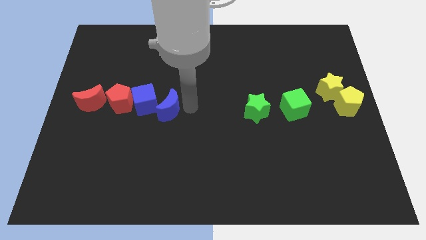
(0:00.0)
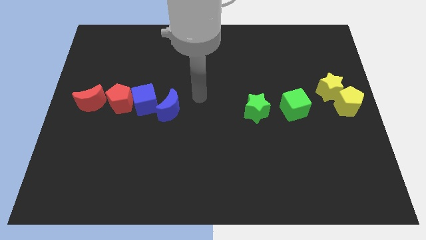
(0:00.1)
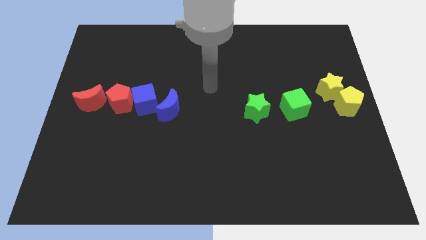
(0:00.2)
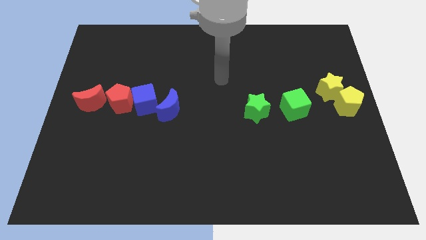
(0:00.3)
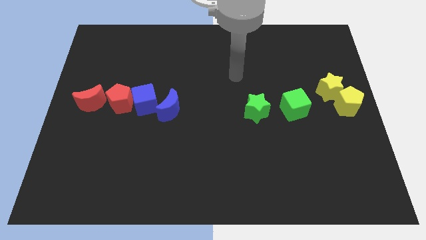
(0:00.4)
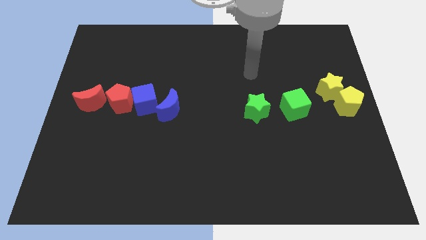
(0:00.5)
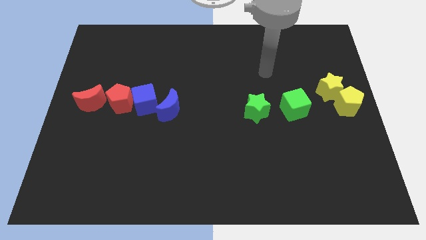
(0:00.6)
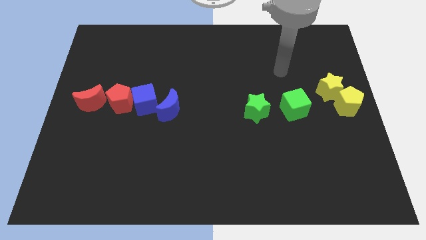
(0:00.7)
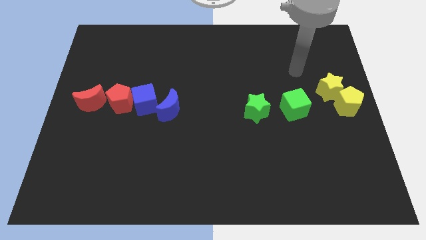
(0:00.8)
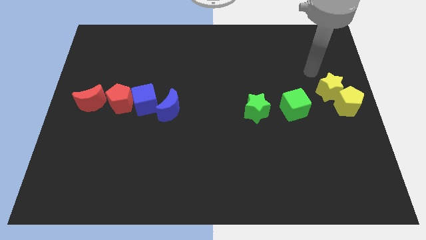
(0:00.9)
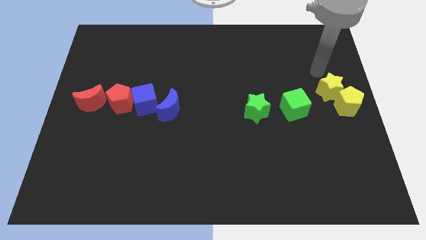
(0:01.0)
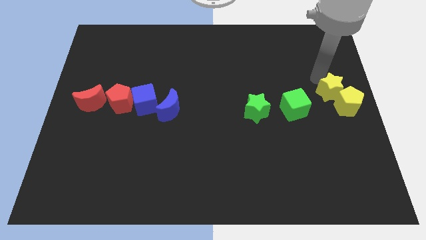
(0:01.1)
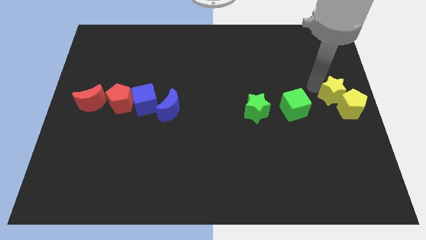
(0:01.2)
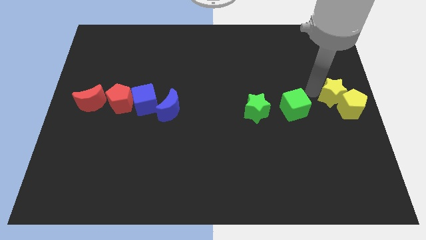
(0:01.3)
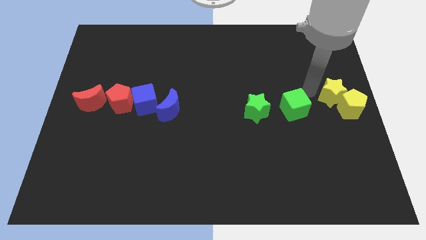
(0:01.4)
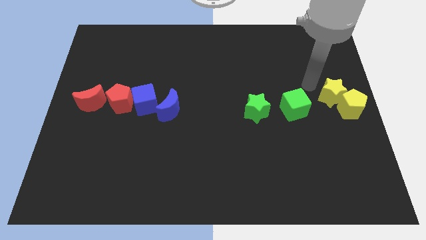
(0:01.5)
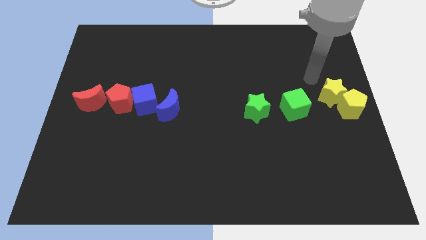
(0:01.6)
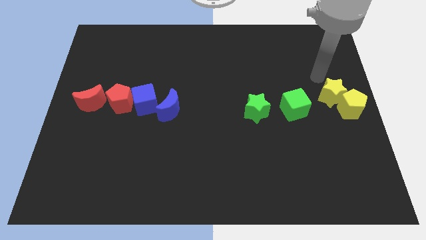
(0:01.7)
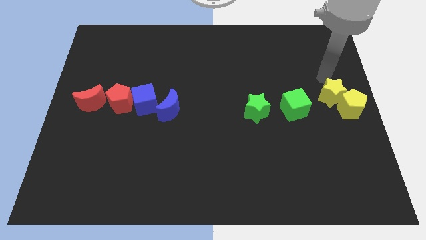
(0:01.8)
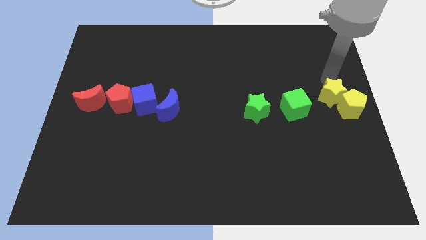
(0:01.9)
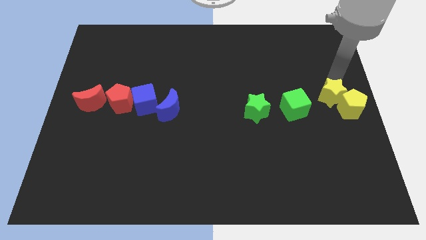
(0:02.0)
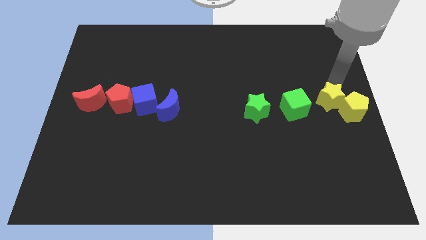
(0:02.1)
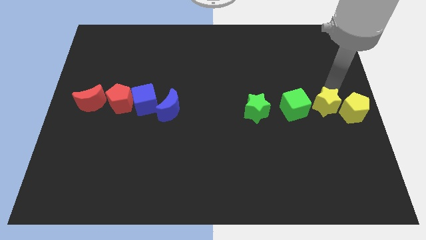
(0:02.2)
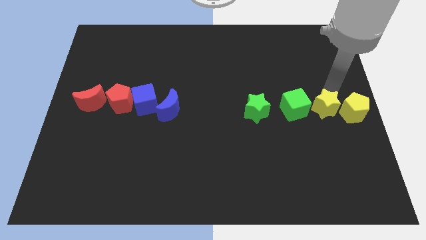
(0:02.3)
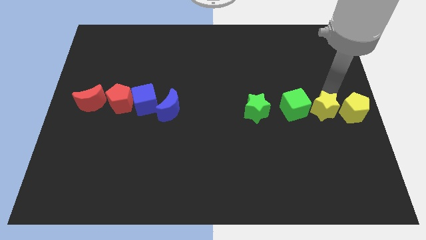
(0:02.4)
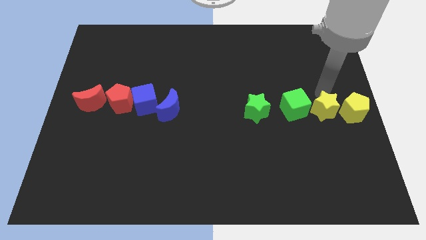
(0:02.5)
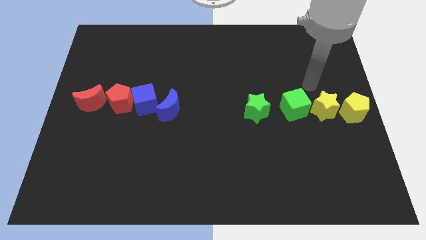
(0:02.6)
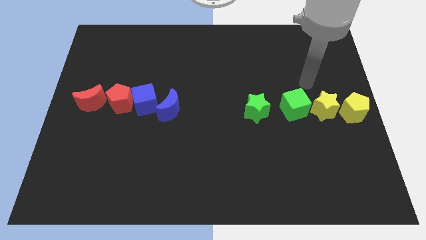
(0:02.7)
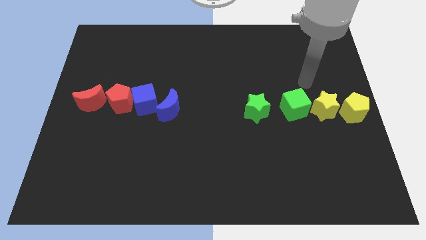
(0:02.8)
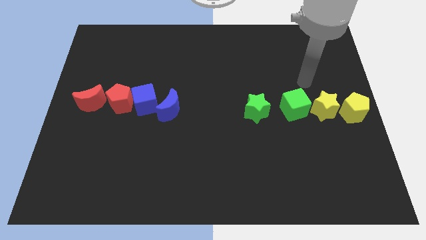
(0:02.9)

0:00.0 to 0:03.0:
move yellow blocks right beside the green blocks

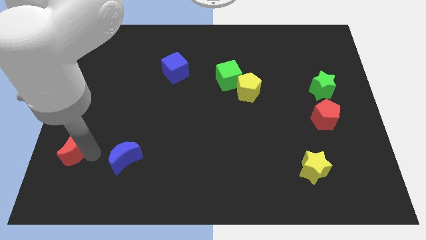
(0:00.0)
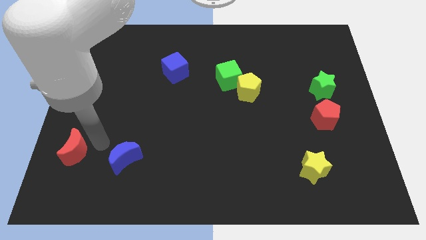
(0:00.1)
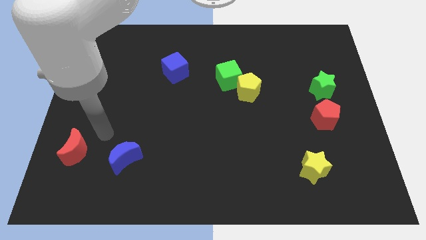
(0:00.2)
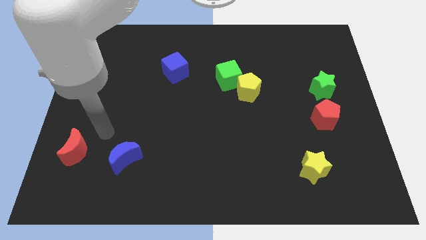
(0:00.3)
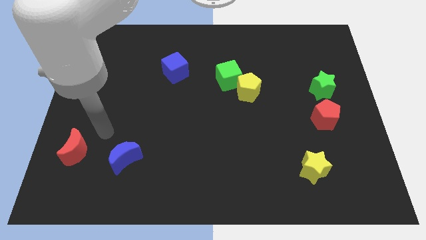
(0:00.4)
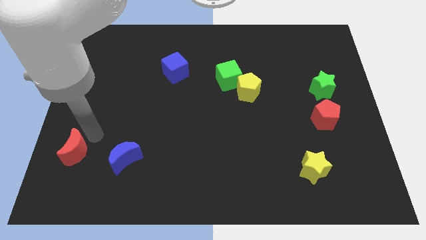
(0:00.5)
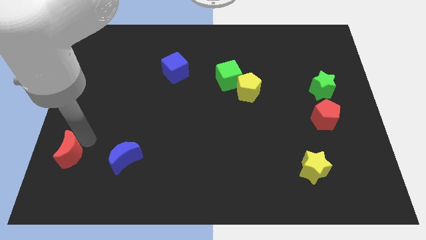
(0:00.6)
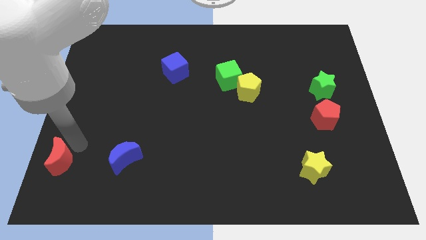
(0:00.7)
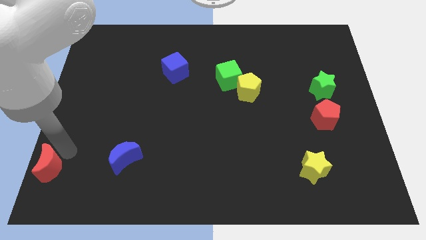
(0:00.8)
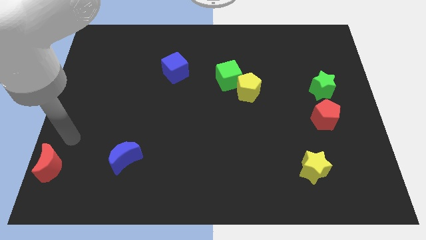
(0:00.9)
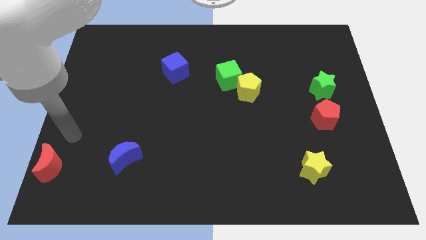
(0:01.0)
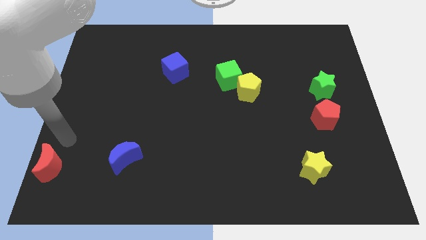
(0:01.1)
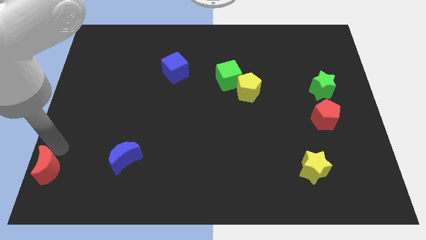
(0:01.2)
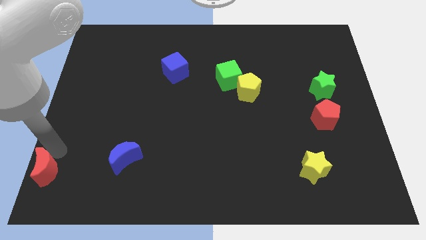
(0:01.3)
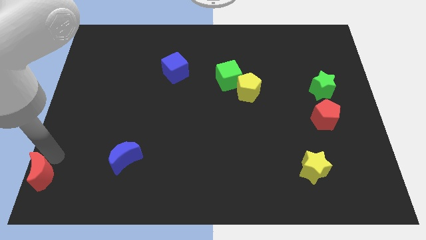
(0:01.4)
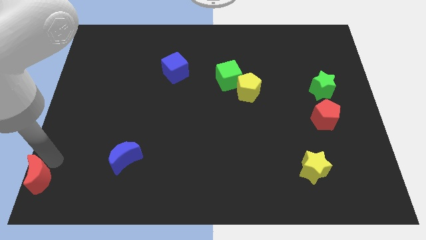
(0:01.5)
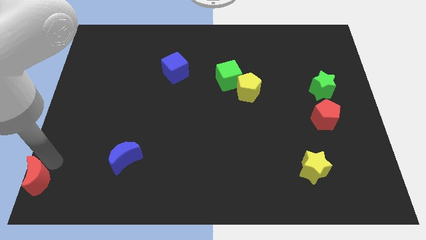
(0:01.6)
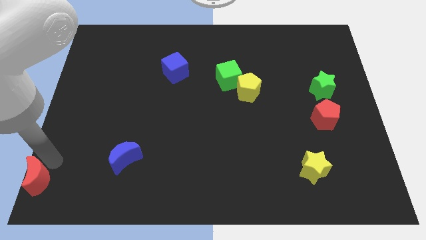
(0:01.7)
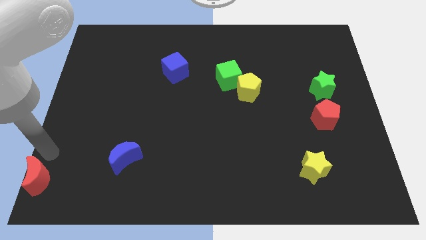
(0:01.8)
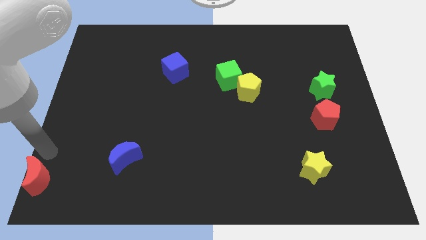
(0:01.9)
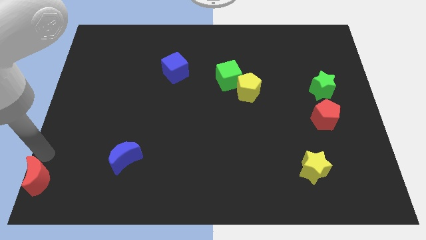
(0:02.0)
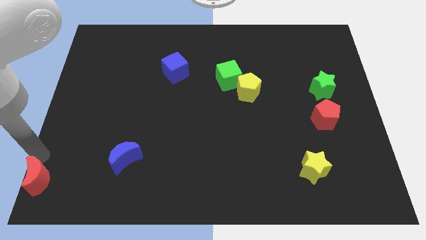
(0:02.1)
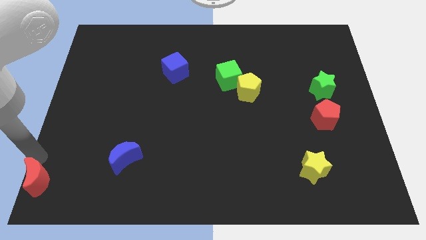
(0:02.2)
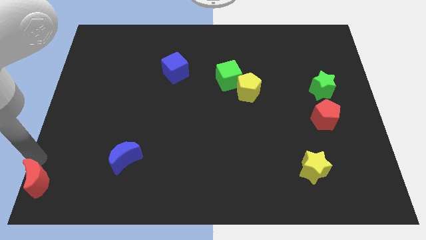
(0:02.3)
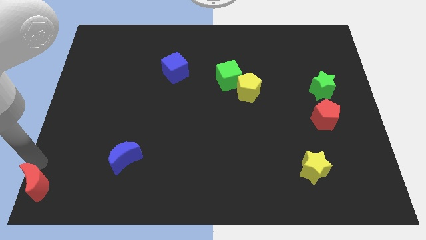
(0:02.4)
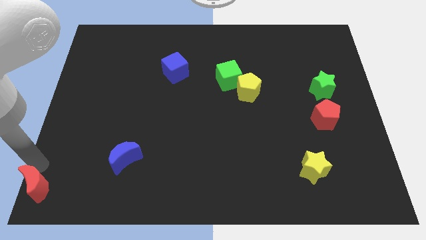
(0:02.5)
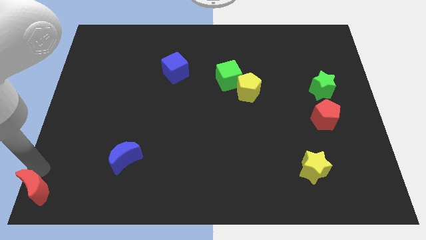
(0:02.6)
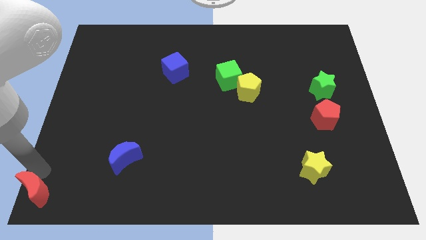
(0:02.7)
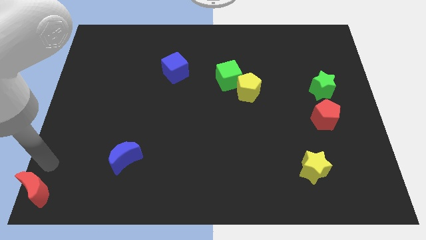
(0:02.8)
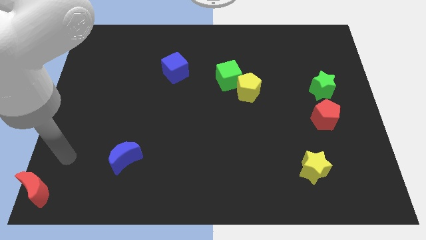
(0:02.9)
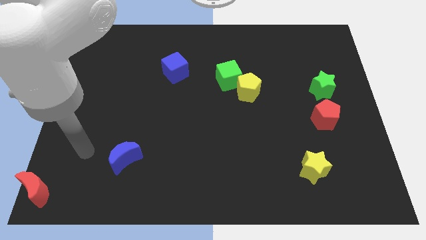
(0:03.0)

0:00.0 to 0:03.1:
push the red moon to the bottom left corner of the board

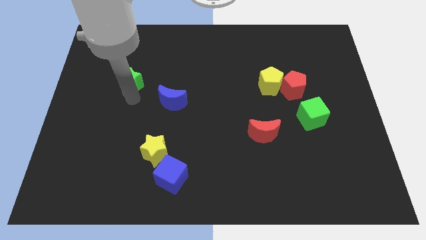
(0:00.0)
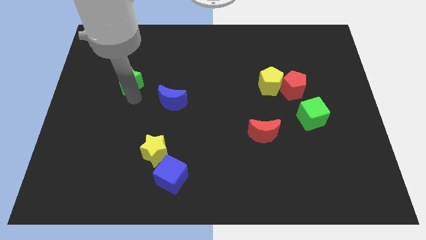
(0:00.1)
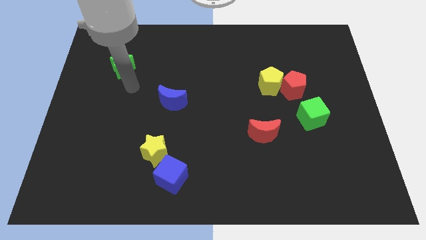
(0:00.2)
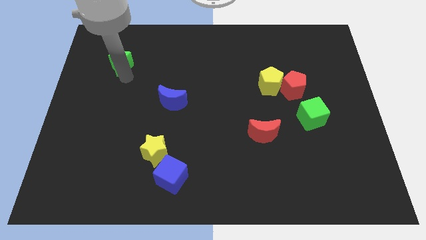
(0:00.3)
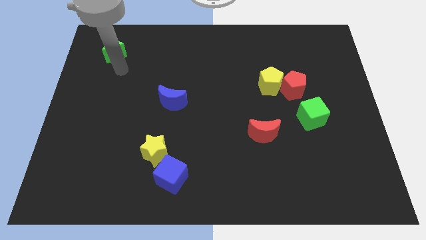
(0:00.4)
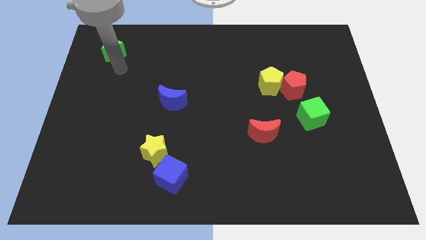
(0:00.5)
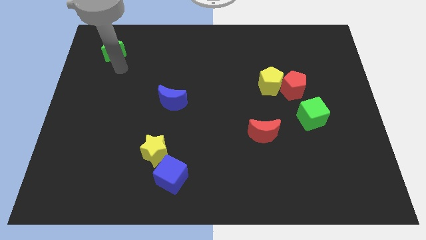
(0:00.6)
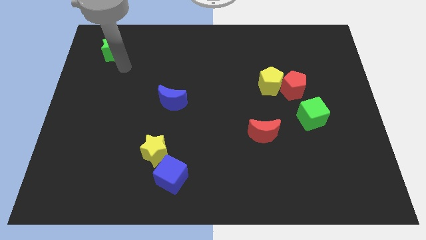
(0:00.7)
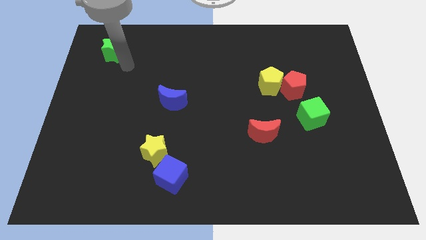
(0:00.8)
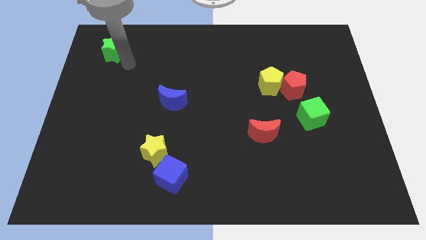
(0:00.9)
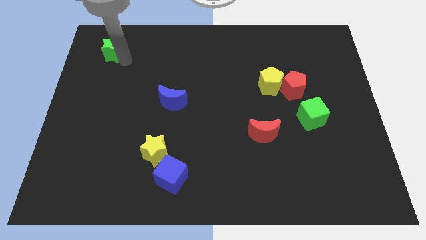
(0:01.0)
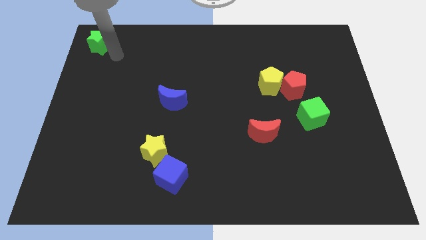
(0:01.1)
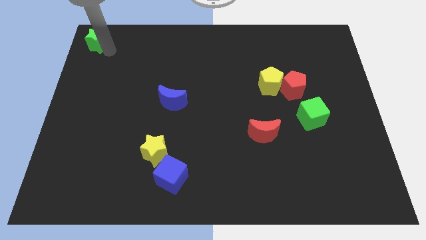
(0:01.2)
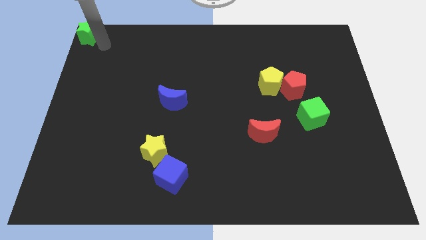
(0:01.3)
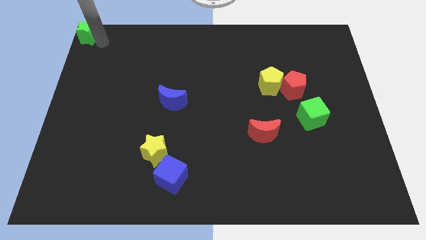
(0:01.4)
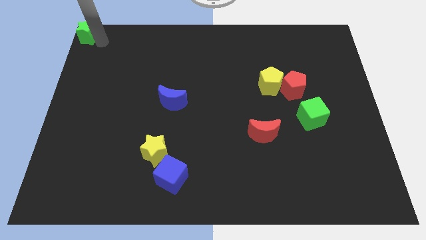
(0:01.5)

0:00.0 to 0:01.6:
push the green star to the top left corner of the board

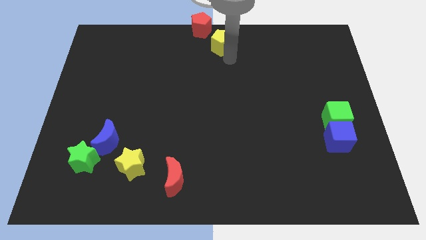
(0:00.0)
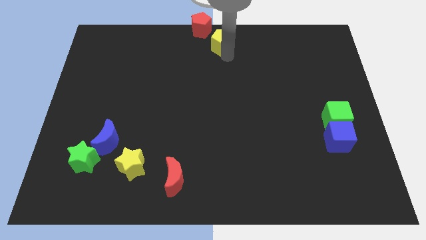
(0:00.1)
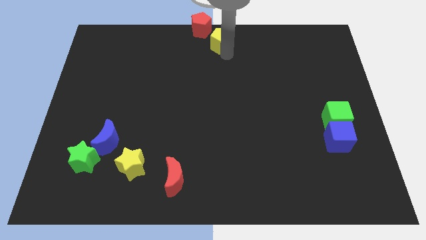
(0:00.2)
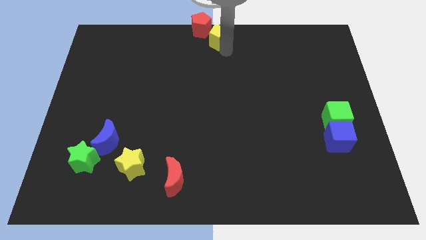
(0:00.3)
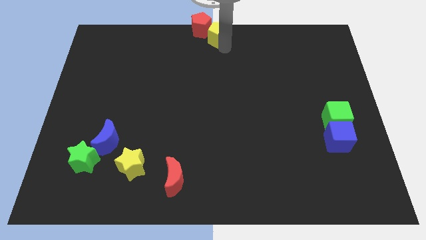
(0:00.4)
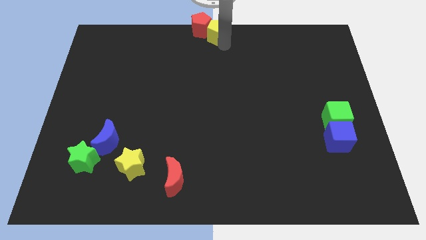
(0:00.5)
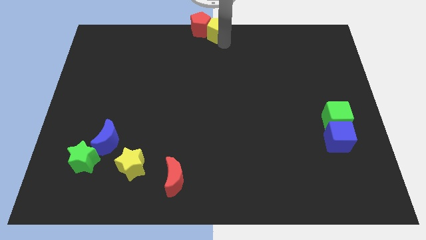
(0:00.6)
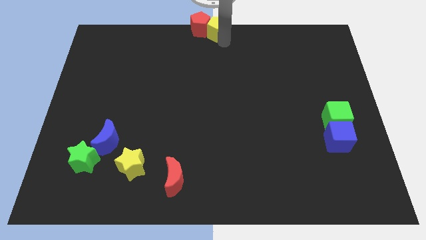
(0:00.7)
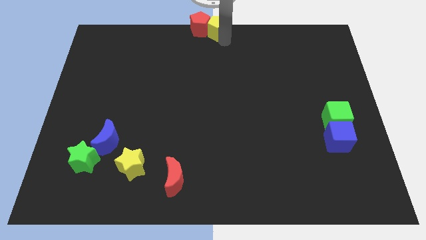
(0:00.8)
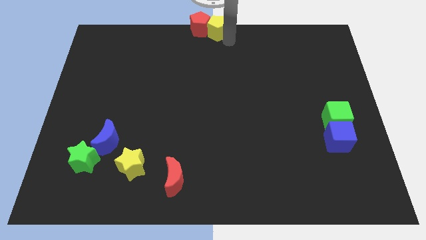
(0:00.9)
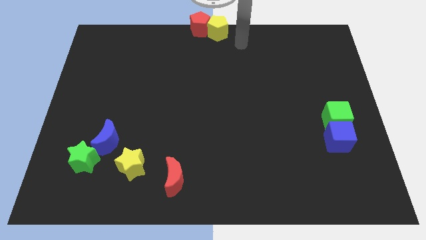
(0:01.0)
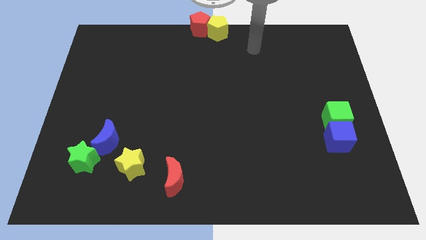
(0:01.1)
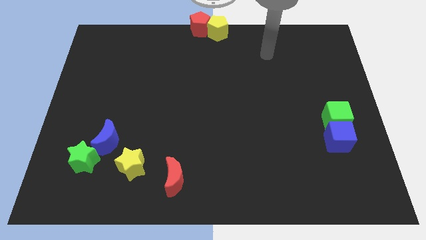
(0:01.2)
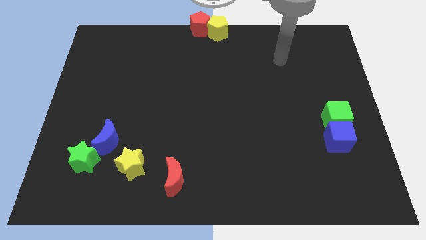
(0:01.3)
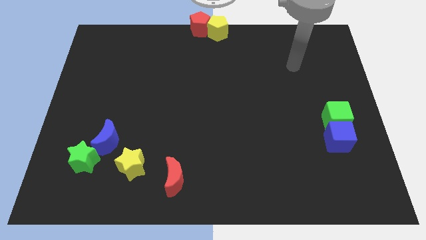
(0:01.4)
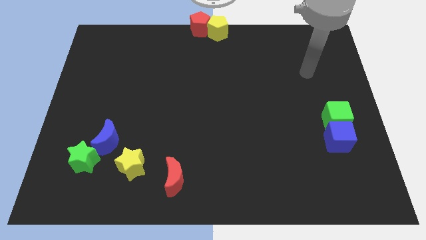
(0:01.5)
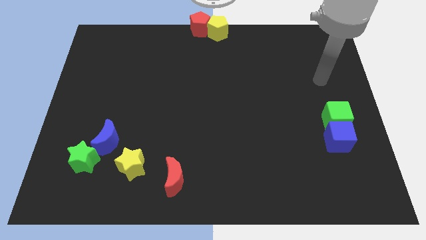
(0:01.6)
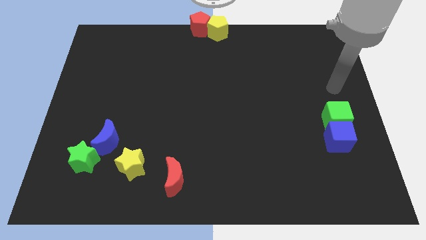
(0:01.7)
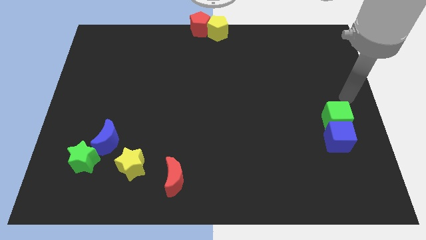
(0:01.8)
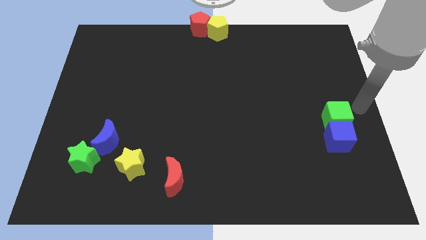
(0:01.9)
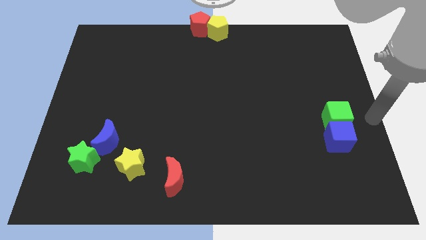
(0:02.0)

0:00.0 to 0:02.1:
move the yellow pentagon to the top center of the board
